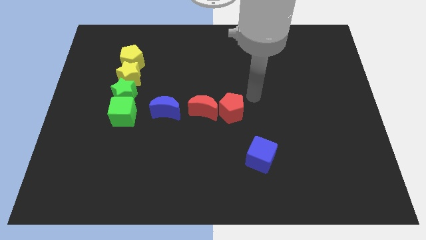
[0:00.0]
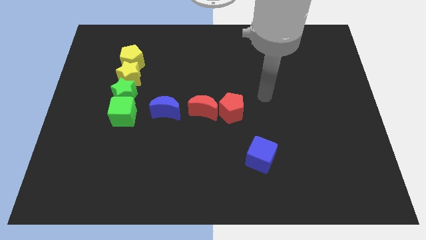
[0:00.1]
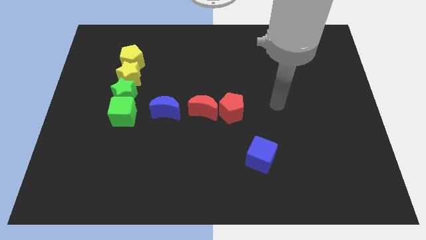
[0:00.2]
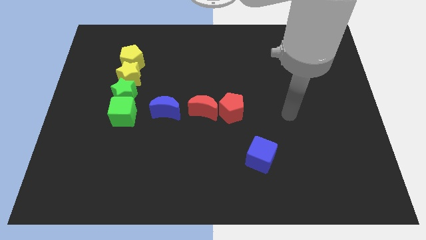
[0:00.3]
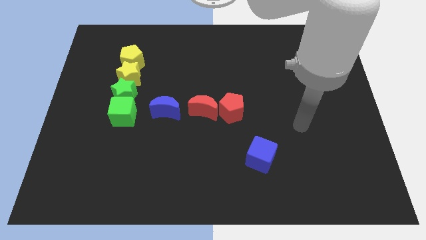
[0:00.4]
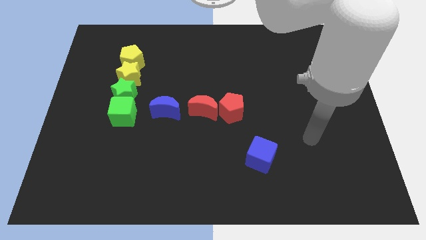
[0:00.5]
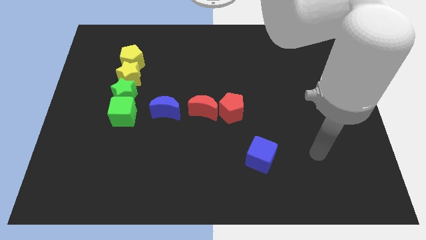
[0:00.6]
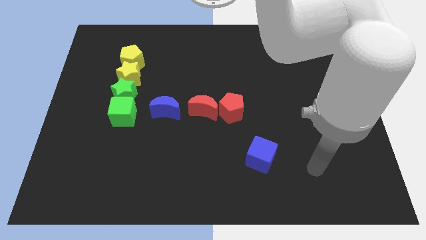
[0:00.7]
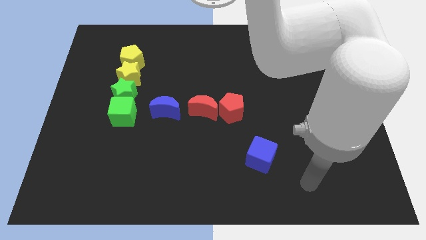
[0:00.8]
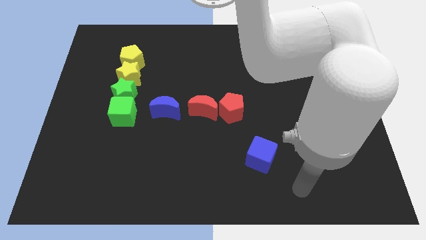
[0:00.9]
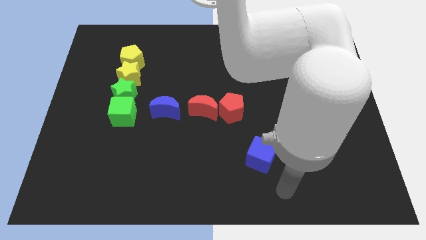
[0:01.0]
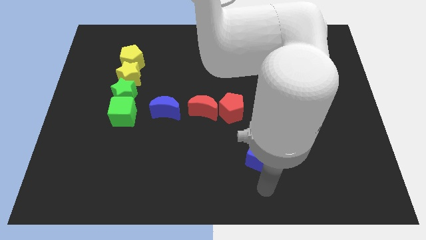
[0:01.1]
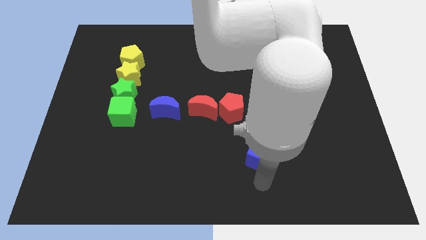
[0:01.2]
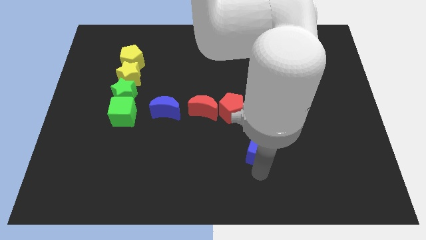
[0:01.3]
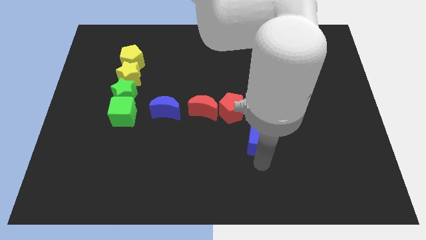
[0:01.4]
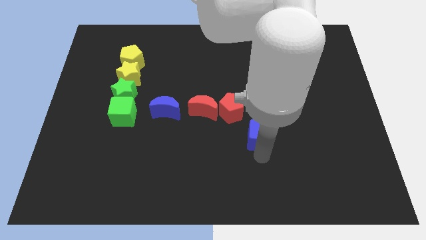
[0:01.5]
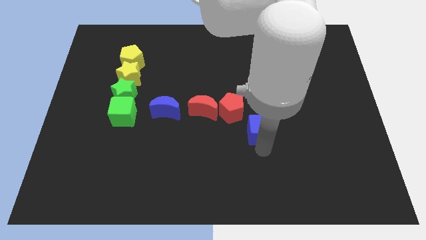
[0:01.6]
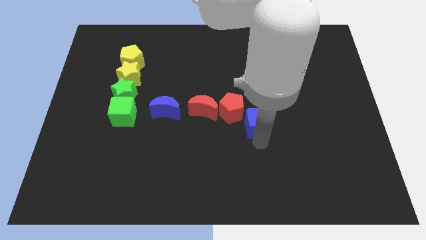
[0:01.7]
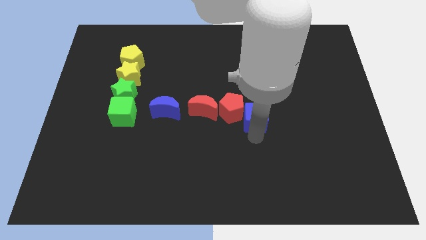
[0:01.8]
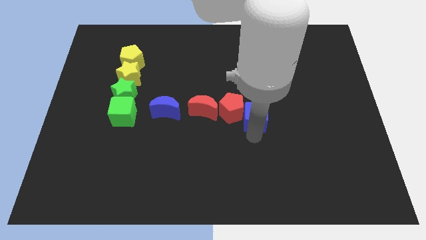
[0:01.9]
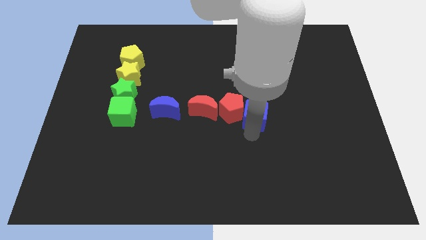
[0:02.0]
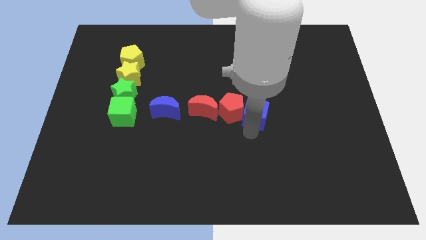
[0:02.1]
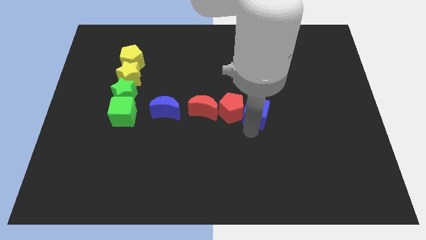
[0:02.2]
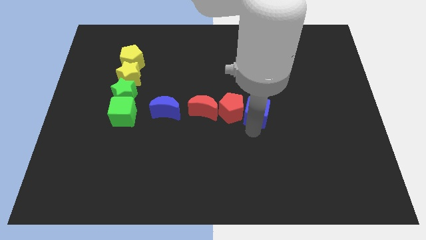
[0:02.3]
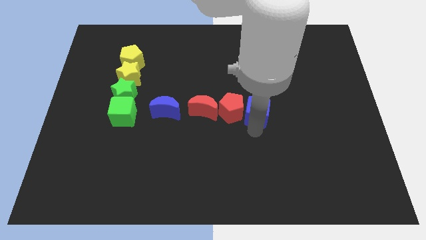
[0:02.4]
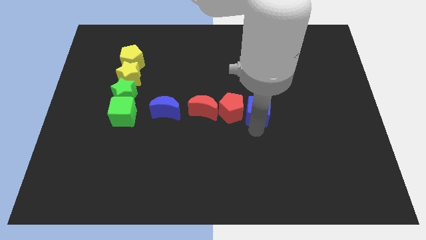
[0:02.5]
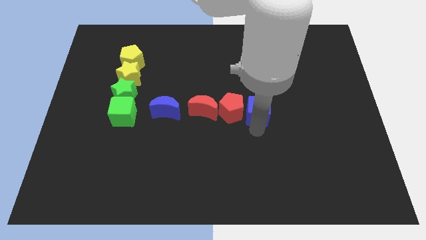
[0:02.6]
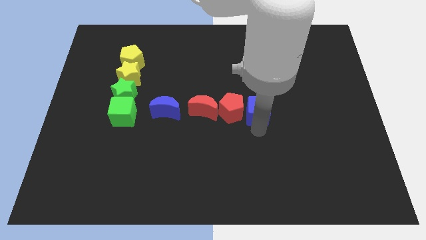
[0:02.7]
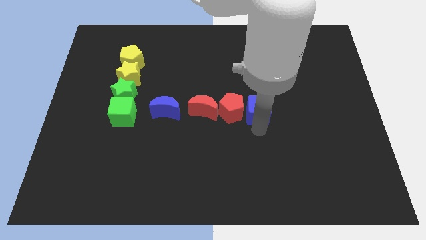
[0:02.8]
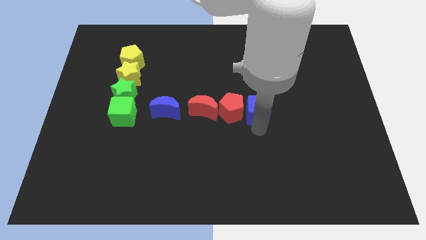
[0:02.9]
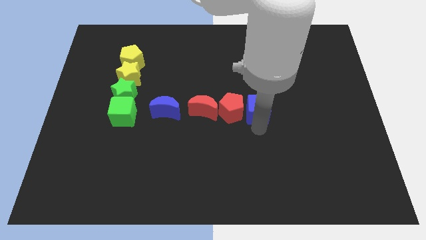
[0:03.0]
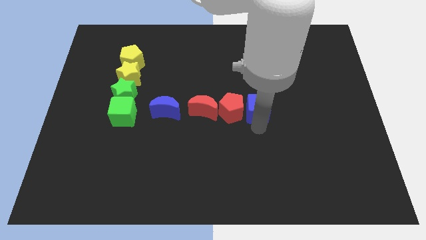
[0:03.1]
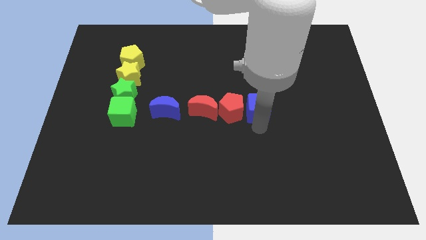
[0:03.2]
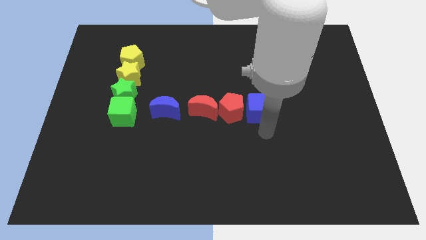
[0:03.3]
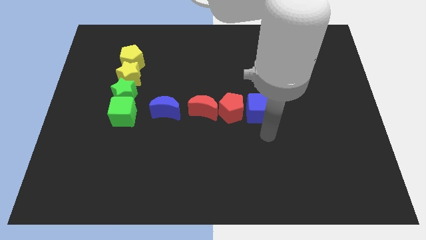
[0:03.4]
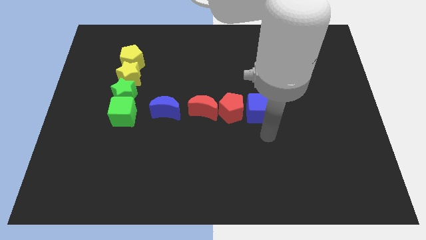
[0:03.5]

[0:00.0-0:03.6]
place the blue cube to the right side of the red pentagon

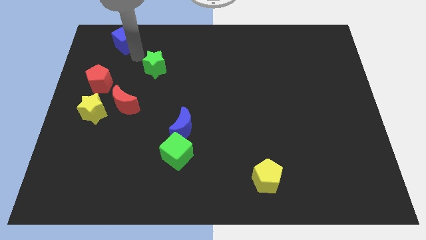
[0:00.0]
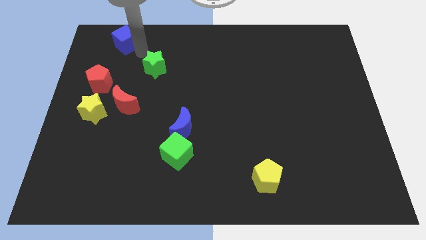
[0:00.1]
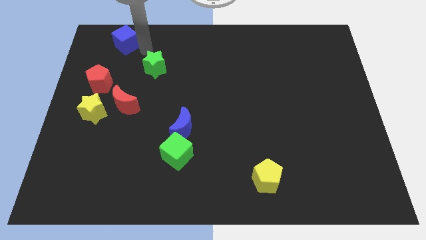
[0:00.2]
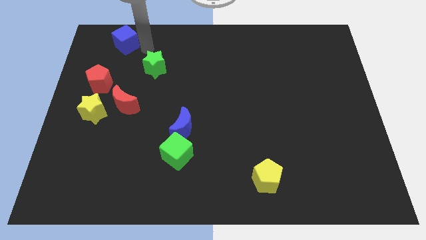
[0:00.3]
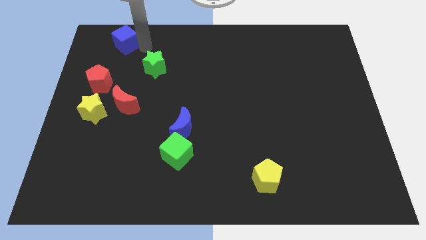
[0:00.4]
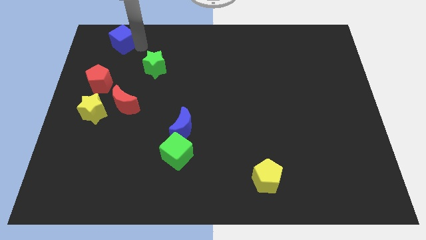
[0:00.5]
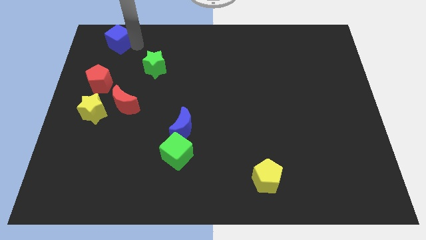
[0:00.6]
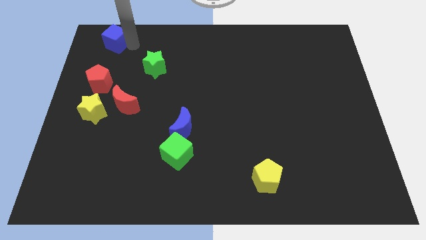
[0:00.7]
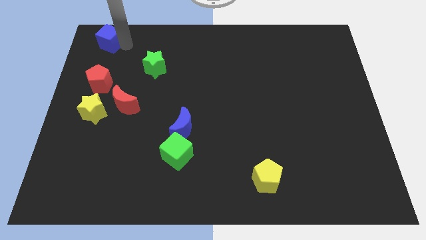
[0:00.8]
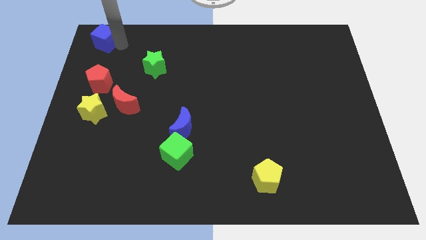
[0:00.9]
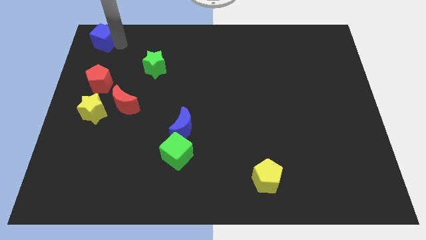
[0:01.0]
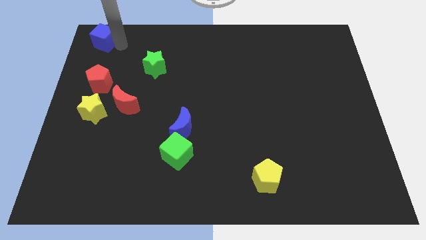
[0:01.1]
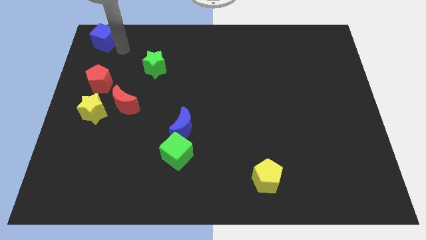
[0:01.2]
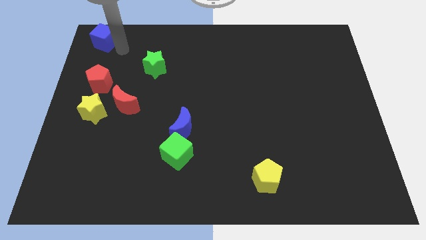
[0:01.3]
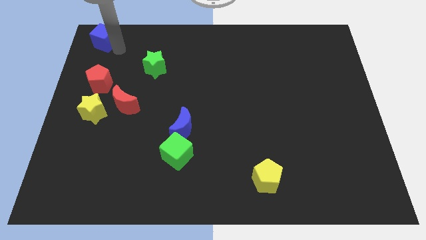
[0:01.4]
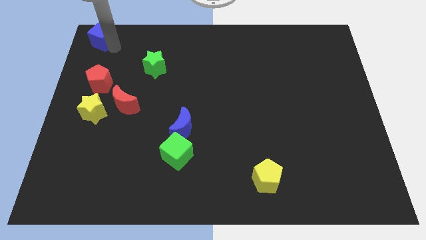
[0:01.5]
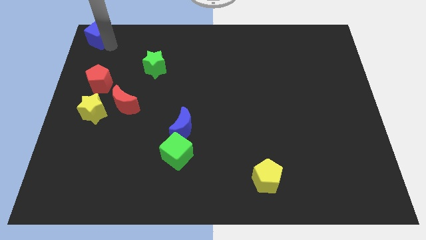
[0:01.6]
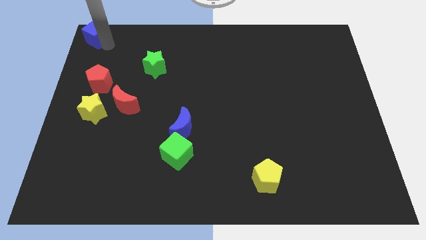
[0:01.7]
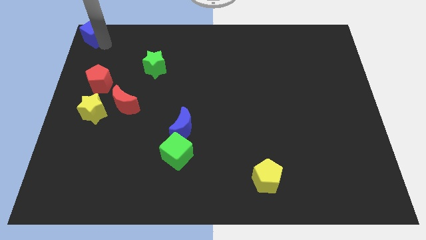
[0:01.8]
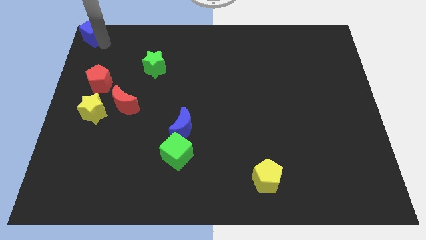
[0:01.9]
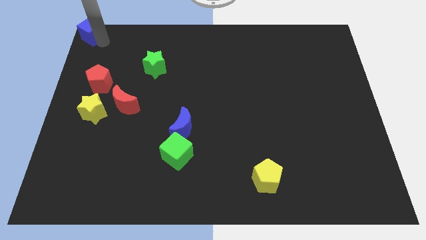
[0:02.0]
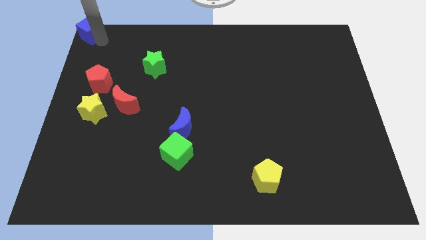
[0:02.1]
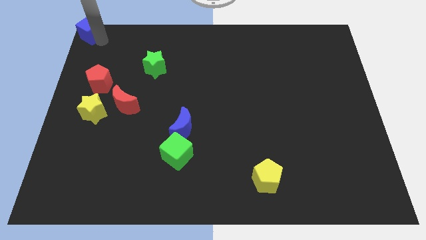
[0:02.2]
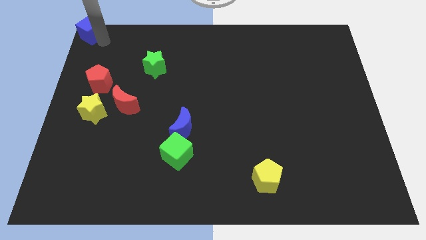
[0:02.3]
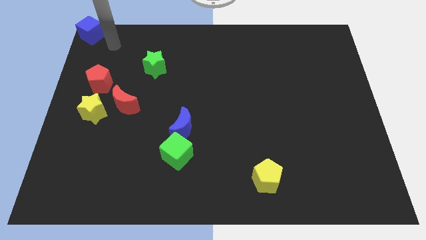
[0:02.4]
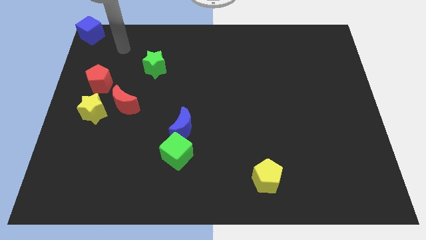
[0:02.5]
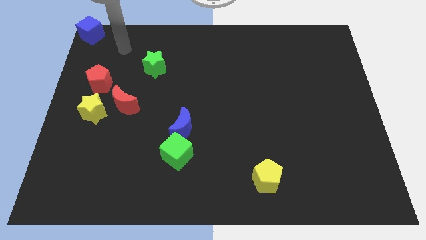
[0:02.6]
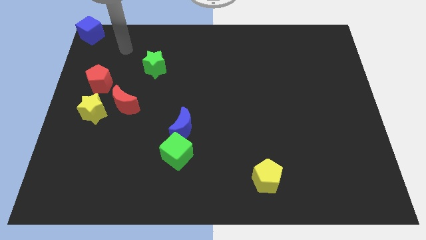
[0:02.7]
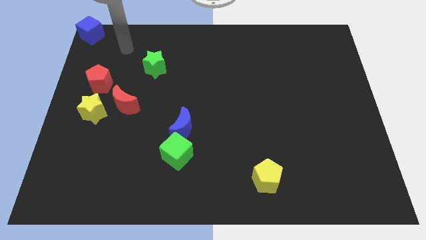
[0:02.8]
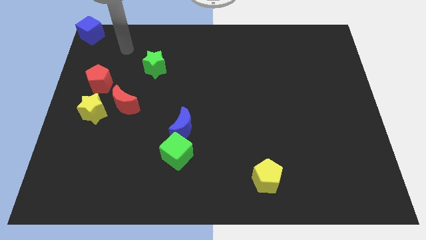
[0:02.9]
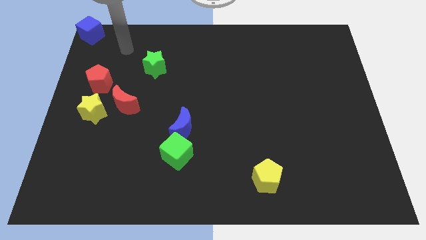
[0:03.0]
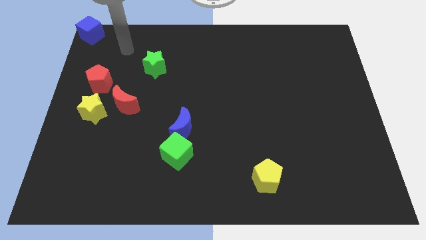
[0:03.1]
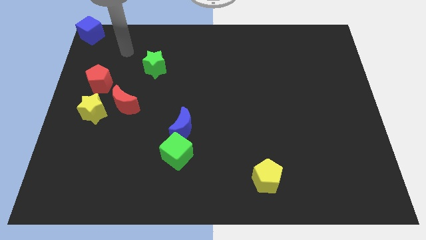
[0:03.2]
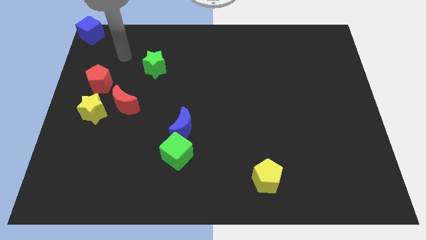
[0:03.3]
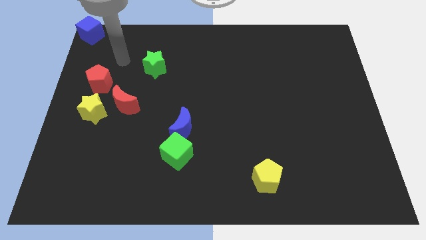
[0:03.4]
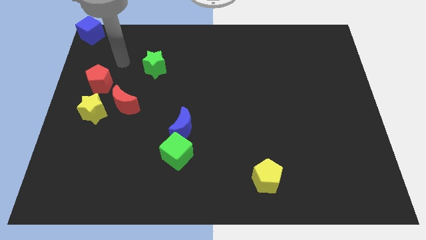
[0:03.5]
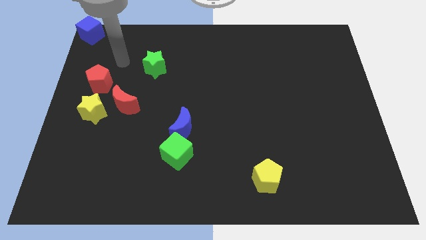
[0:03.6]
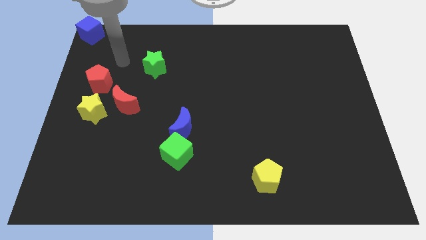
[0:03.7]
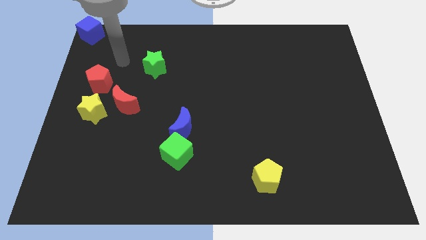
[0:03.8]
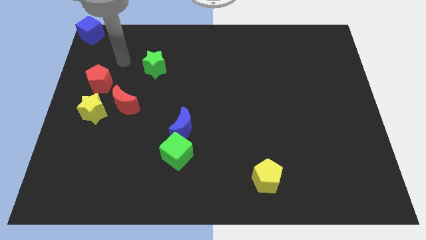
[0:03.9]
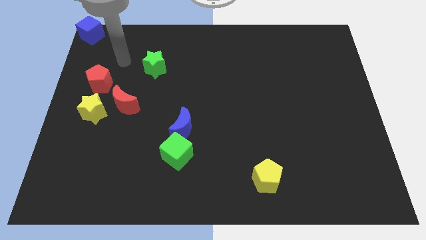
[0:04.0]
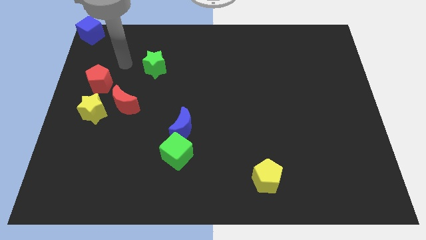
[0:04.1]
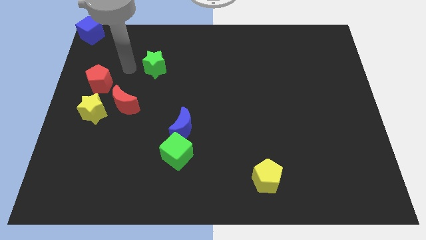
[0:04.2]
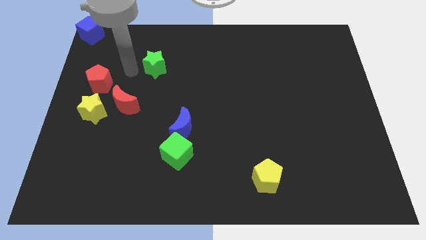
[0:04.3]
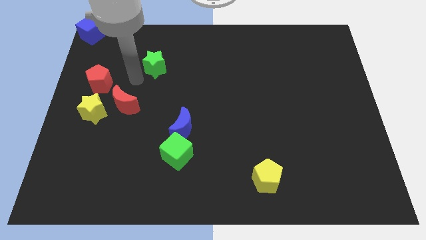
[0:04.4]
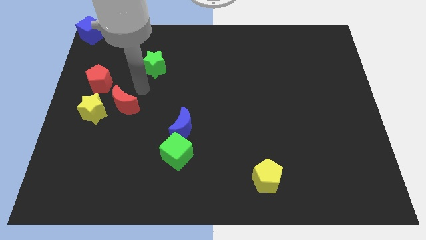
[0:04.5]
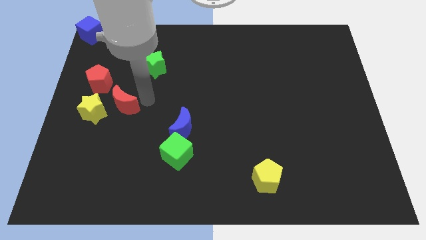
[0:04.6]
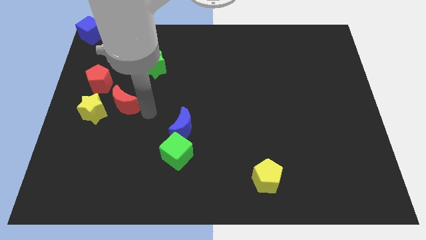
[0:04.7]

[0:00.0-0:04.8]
push the blue cube to the top left corner

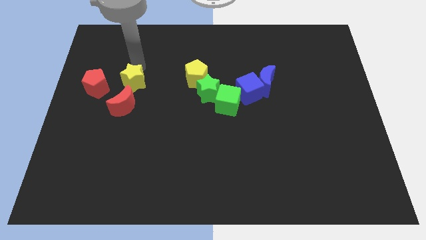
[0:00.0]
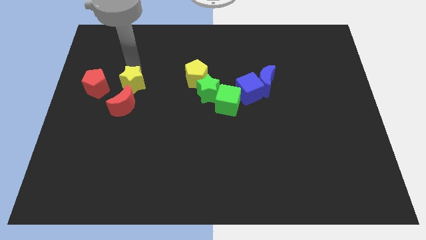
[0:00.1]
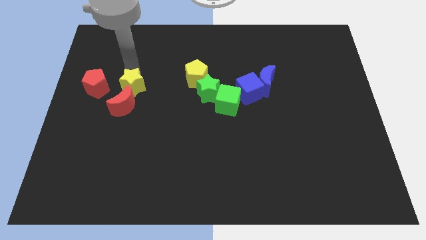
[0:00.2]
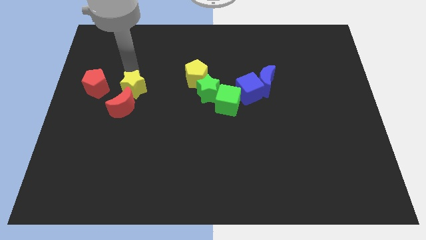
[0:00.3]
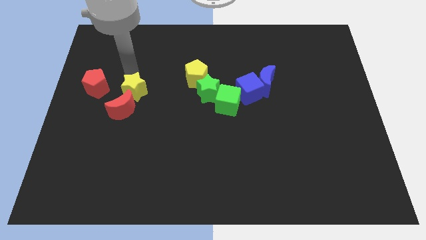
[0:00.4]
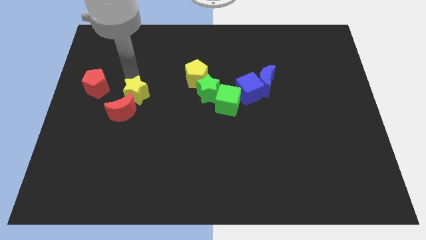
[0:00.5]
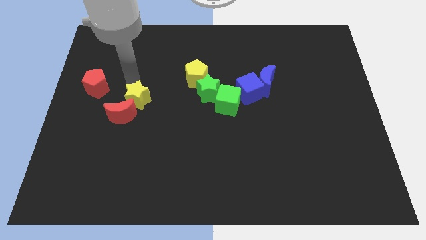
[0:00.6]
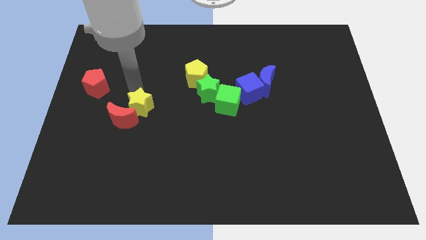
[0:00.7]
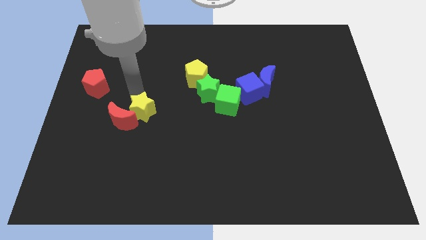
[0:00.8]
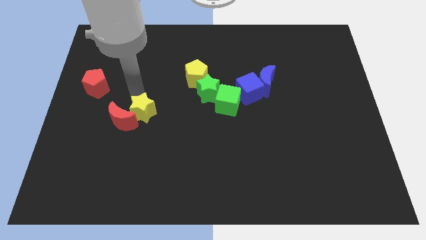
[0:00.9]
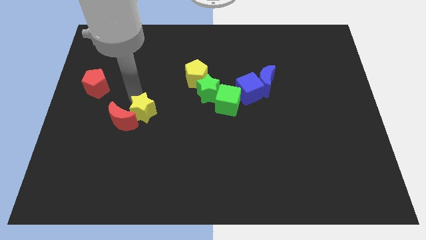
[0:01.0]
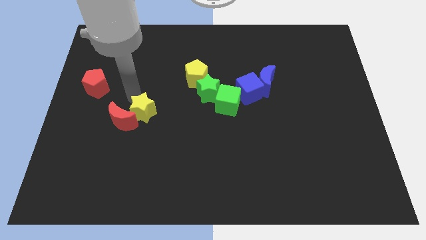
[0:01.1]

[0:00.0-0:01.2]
drag the yellow star slightly downwards
